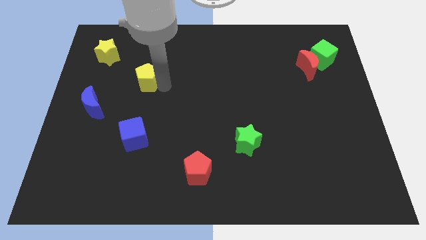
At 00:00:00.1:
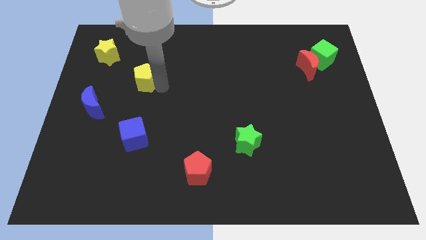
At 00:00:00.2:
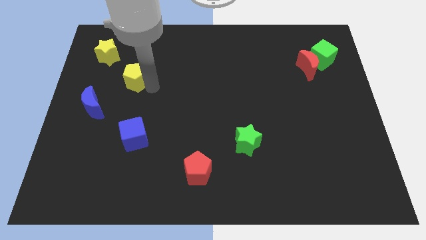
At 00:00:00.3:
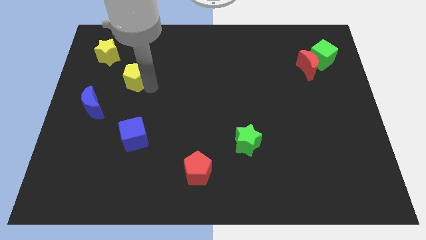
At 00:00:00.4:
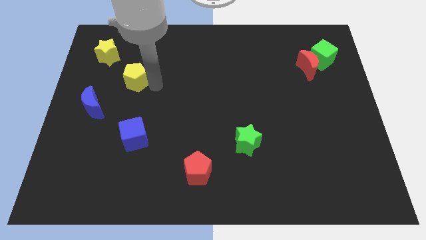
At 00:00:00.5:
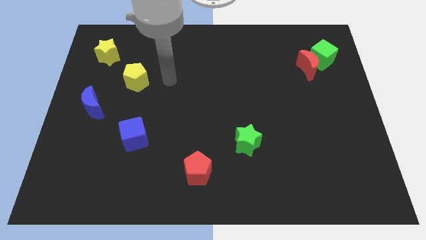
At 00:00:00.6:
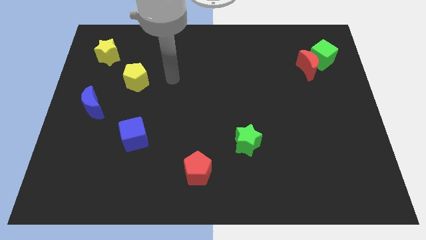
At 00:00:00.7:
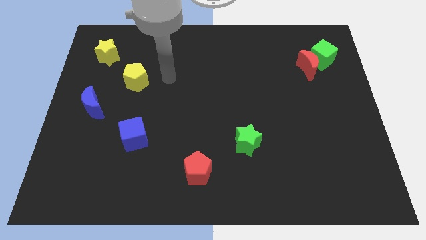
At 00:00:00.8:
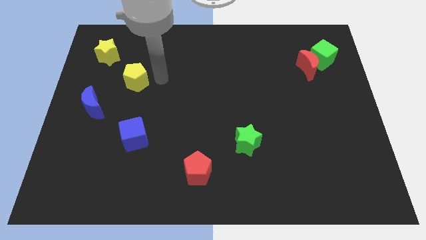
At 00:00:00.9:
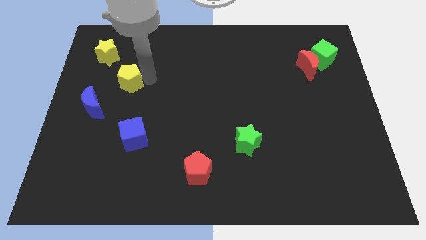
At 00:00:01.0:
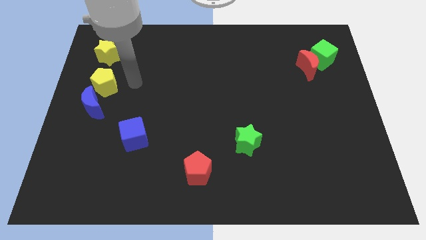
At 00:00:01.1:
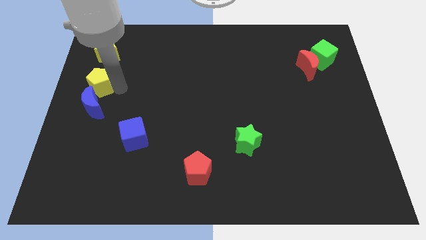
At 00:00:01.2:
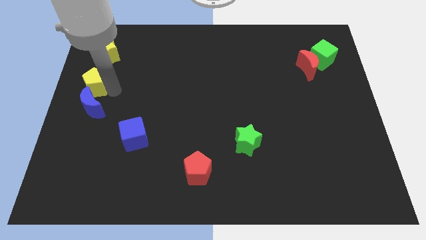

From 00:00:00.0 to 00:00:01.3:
place yellow pentagon to the top side of the blue crescent

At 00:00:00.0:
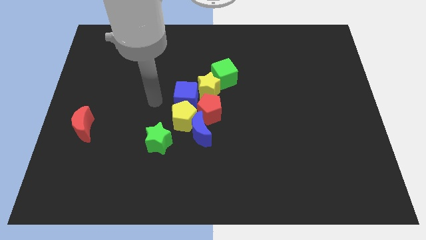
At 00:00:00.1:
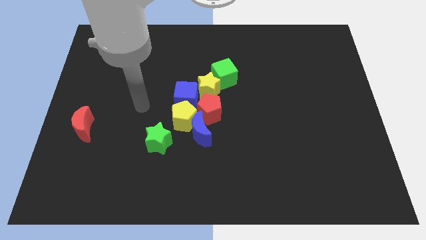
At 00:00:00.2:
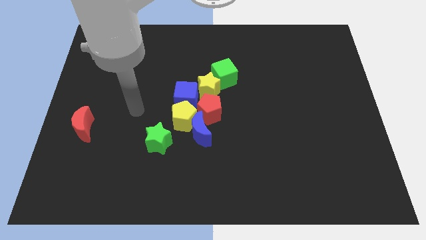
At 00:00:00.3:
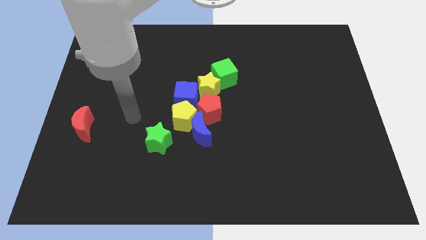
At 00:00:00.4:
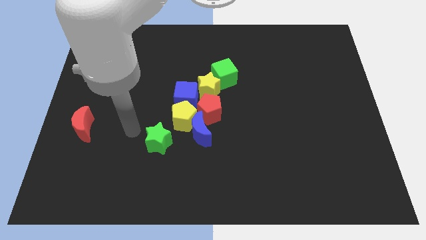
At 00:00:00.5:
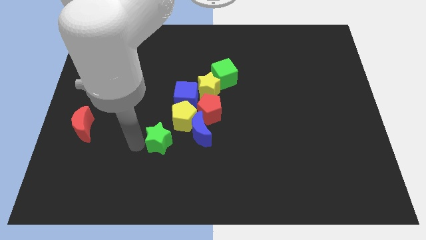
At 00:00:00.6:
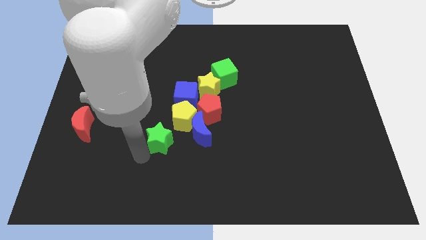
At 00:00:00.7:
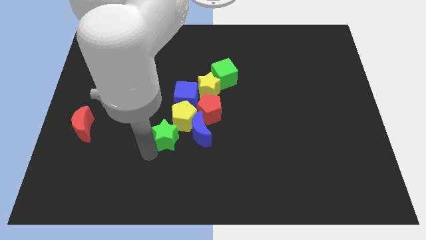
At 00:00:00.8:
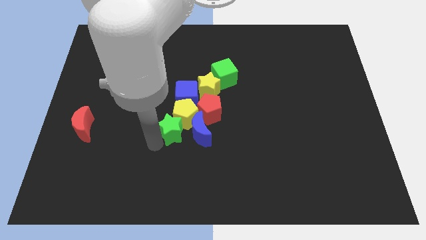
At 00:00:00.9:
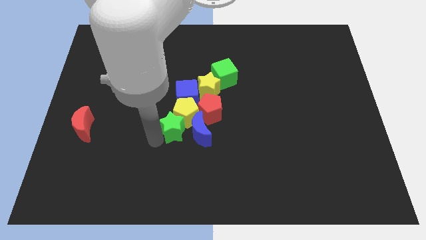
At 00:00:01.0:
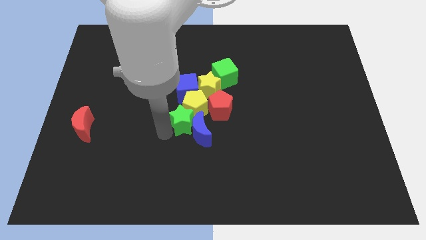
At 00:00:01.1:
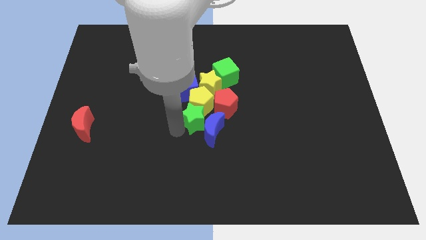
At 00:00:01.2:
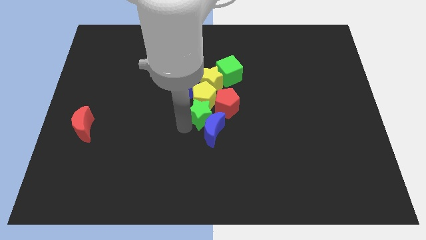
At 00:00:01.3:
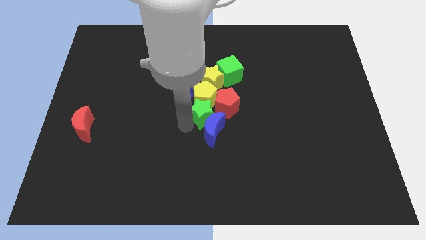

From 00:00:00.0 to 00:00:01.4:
move the group of blocks to the center of the board

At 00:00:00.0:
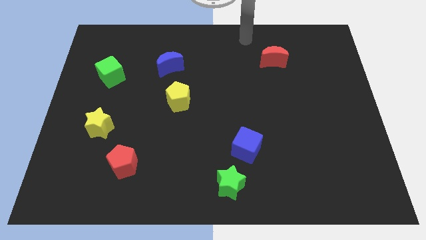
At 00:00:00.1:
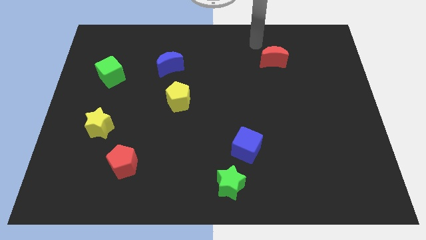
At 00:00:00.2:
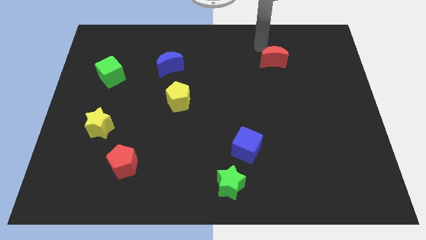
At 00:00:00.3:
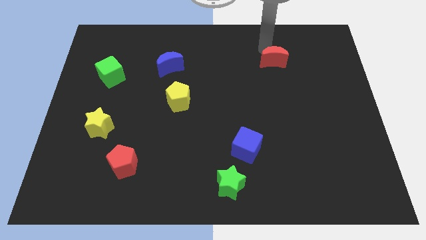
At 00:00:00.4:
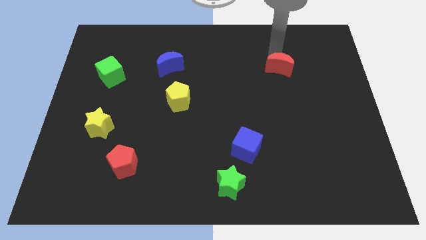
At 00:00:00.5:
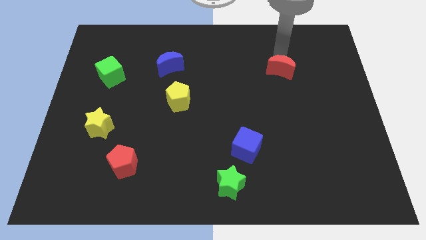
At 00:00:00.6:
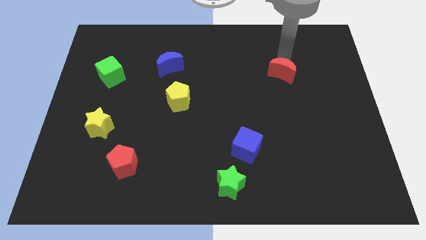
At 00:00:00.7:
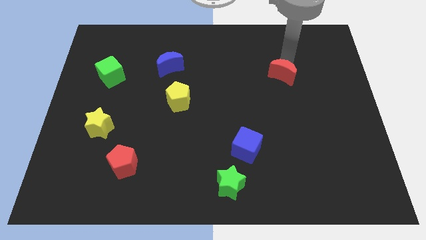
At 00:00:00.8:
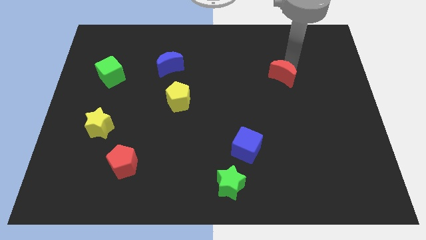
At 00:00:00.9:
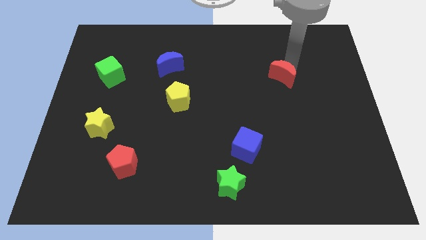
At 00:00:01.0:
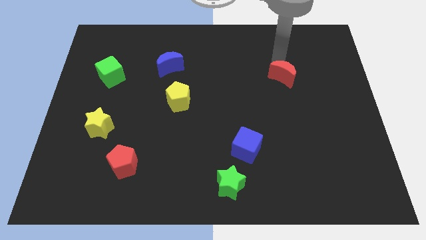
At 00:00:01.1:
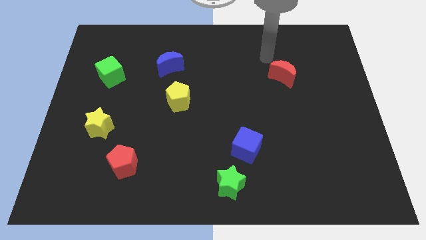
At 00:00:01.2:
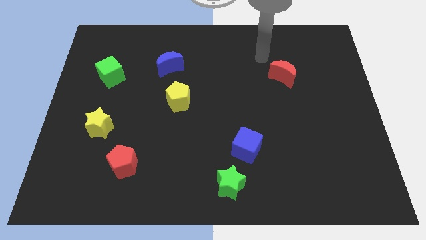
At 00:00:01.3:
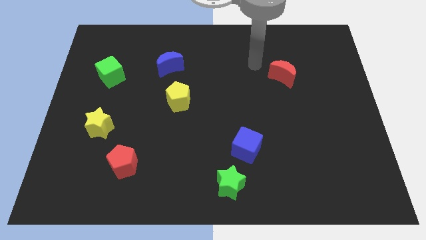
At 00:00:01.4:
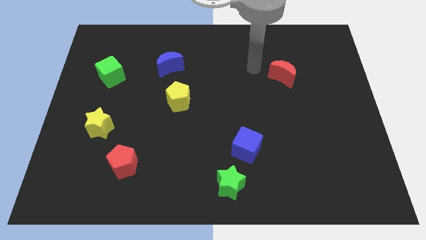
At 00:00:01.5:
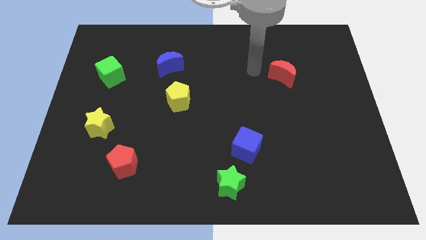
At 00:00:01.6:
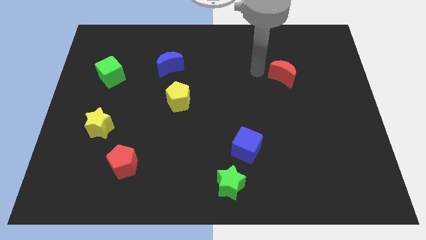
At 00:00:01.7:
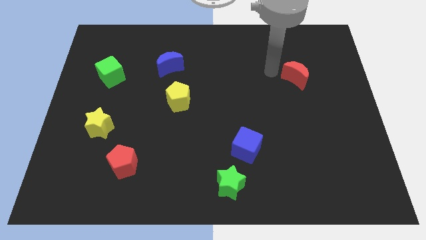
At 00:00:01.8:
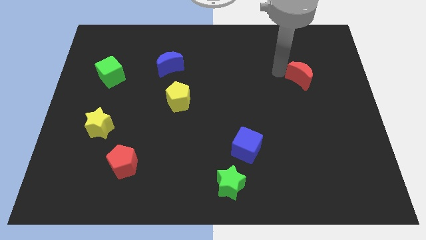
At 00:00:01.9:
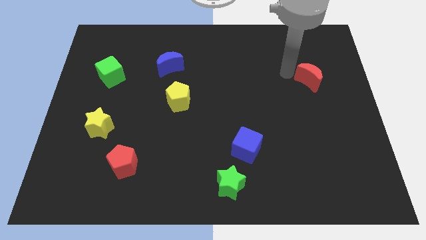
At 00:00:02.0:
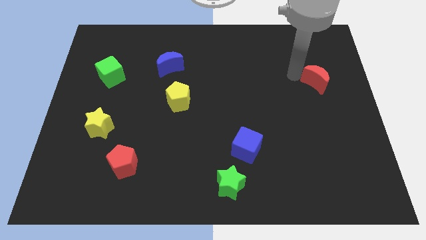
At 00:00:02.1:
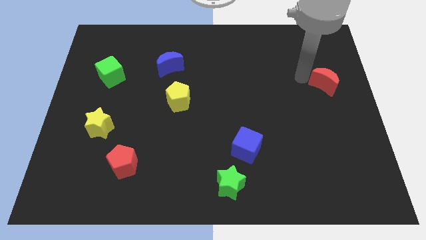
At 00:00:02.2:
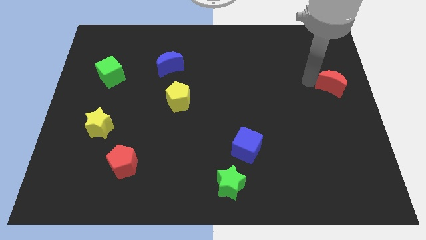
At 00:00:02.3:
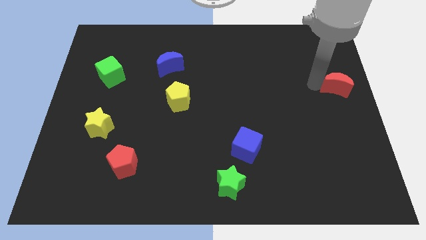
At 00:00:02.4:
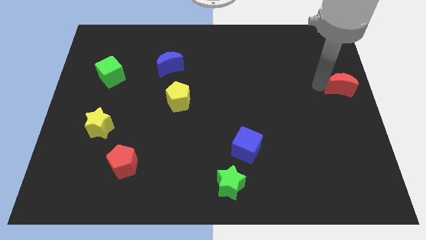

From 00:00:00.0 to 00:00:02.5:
move the red crescent to the top right of the blue cube

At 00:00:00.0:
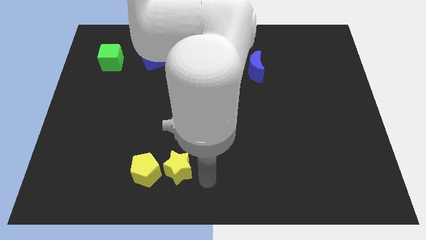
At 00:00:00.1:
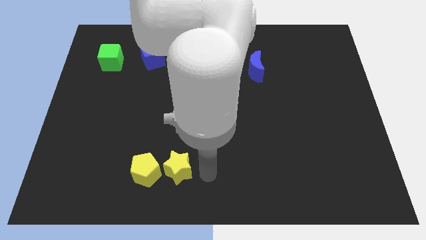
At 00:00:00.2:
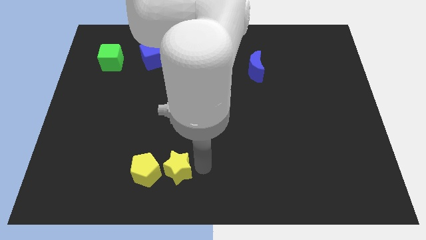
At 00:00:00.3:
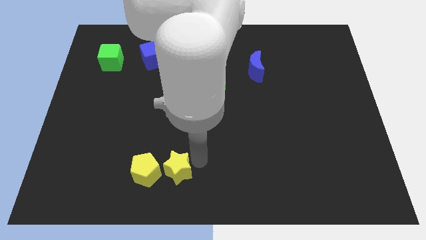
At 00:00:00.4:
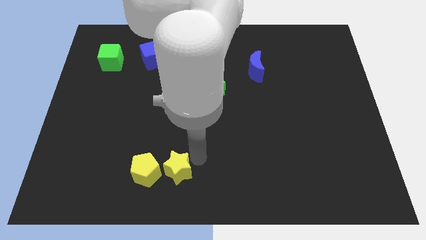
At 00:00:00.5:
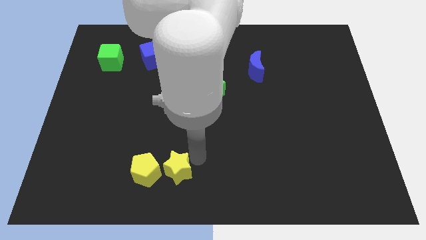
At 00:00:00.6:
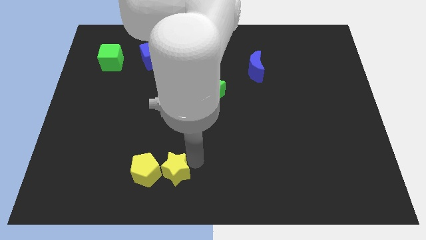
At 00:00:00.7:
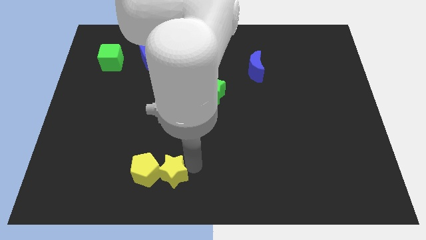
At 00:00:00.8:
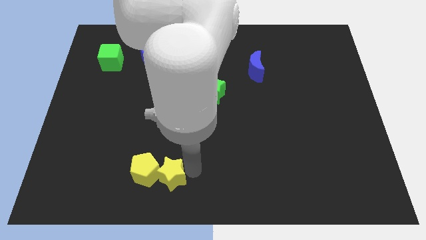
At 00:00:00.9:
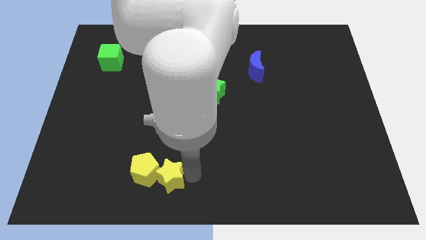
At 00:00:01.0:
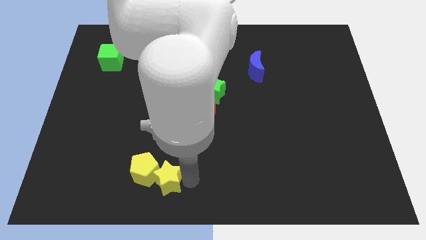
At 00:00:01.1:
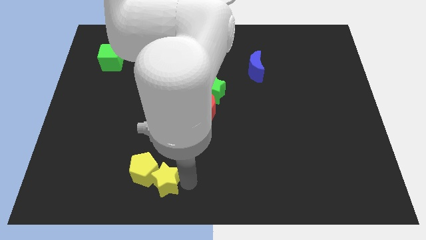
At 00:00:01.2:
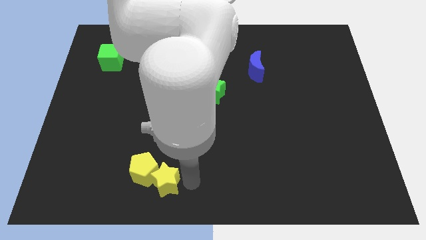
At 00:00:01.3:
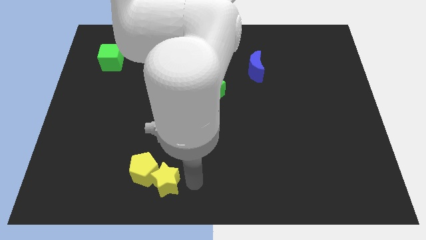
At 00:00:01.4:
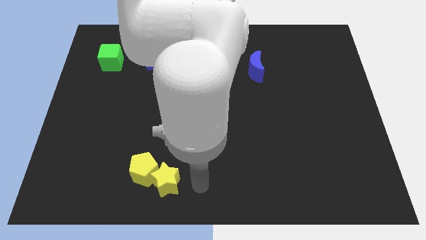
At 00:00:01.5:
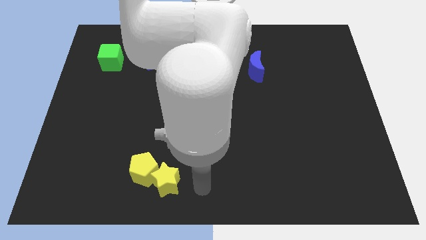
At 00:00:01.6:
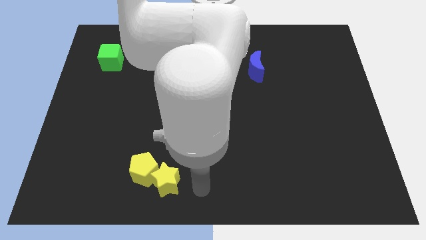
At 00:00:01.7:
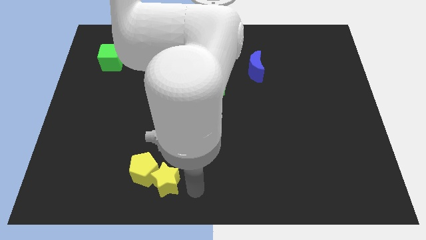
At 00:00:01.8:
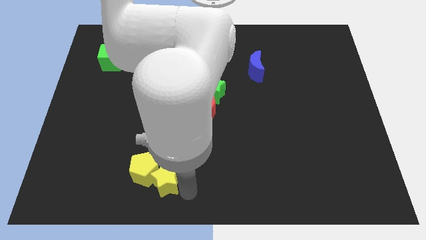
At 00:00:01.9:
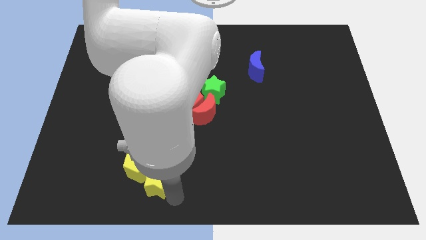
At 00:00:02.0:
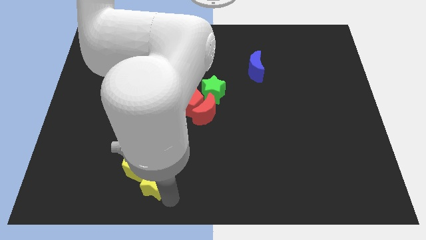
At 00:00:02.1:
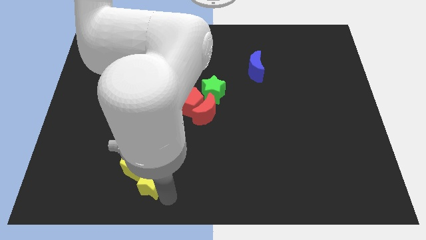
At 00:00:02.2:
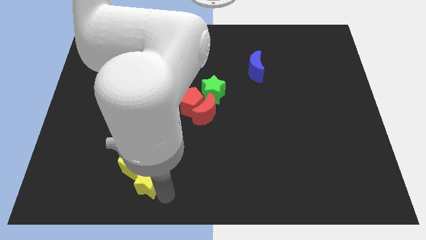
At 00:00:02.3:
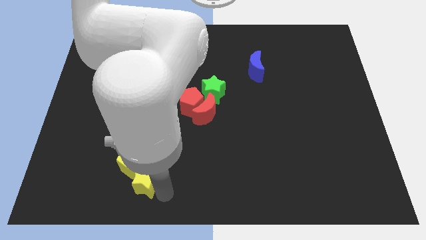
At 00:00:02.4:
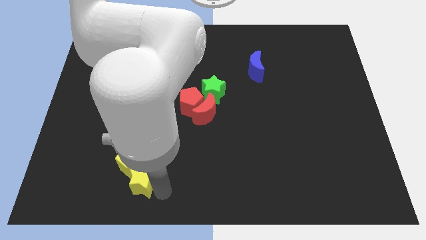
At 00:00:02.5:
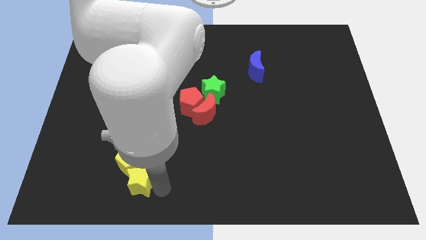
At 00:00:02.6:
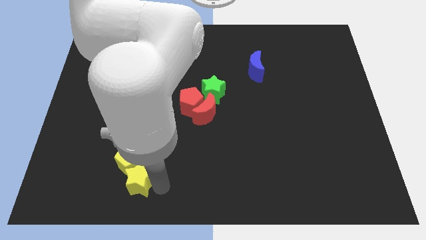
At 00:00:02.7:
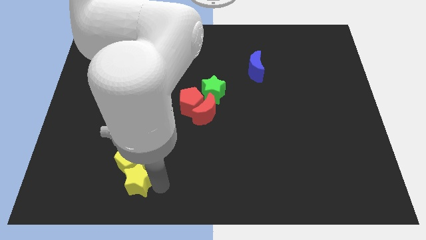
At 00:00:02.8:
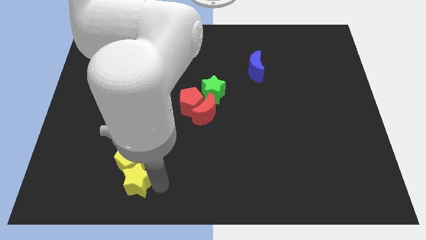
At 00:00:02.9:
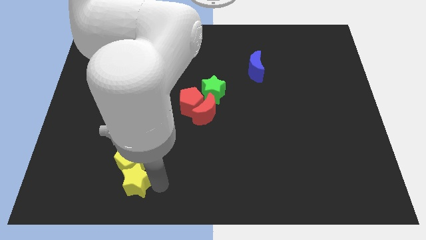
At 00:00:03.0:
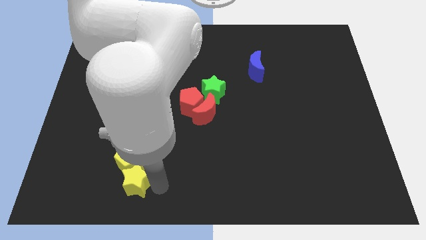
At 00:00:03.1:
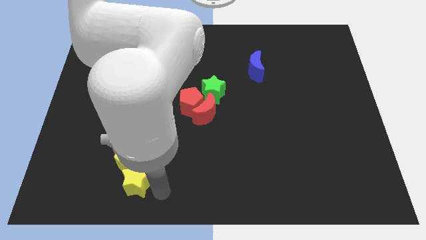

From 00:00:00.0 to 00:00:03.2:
place the yellow star to the bottom side of the yellow pentagon

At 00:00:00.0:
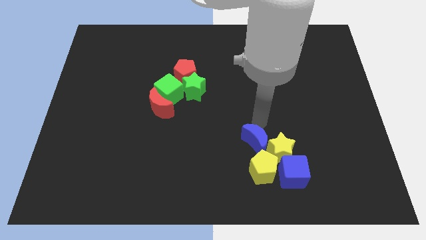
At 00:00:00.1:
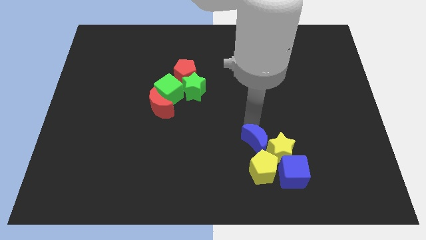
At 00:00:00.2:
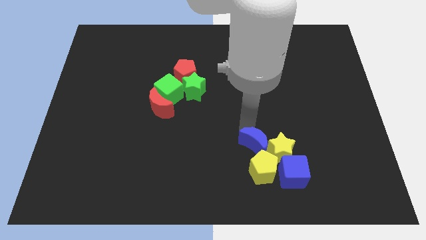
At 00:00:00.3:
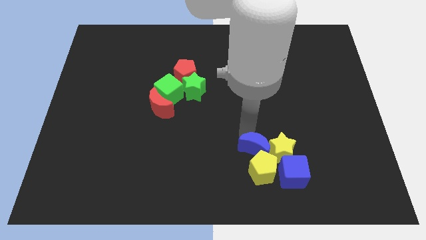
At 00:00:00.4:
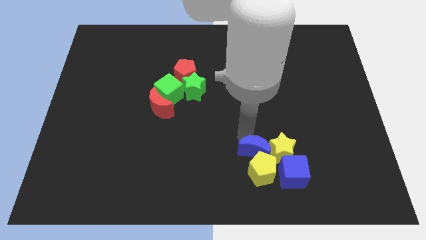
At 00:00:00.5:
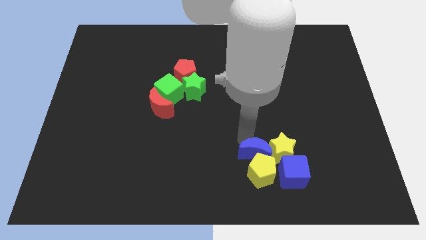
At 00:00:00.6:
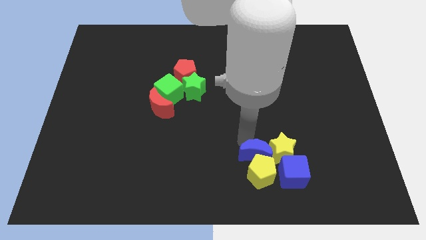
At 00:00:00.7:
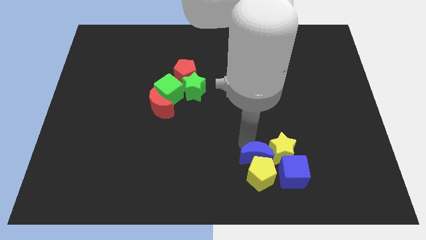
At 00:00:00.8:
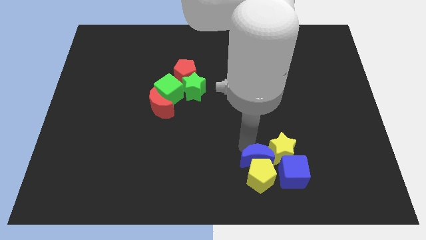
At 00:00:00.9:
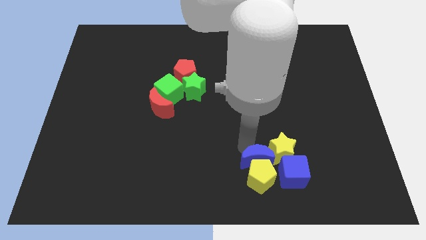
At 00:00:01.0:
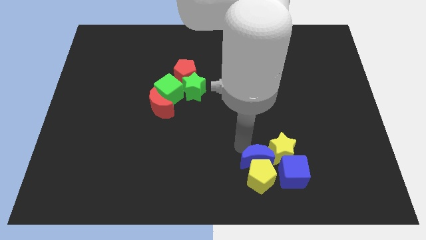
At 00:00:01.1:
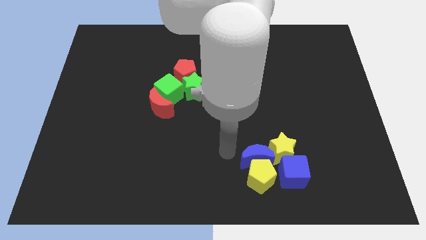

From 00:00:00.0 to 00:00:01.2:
place the blue moon between yellow blocks
